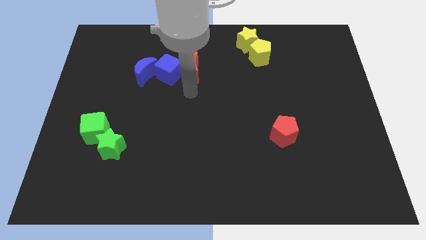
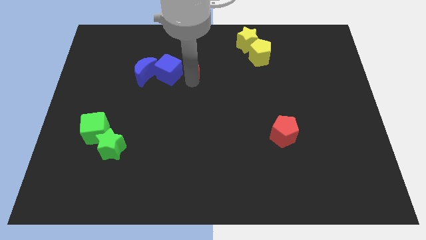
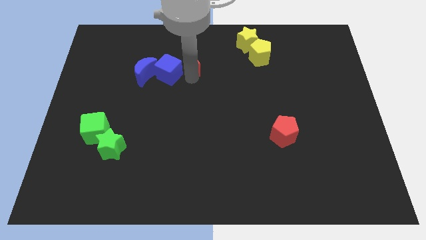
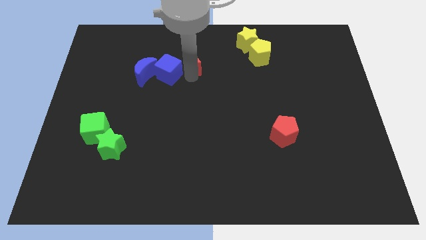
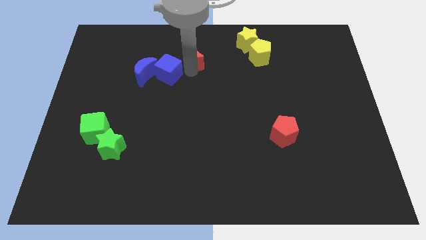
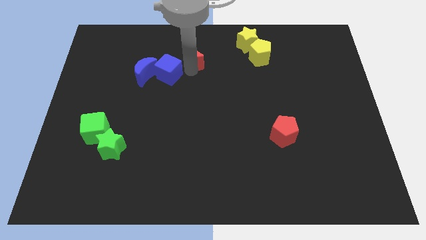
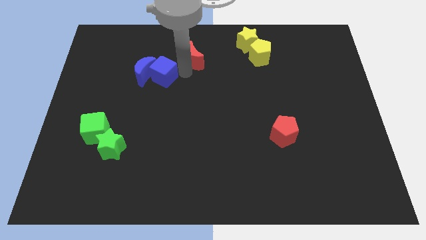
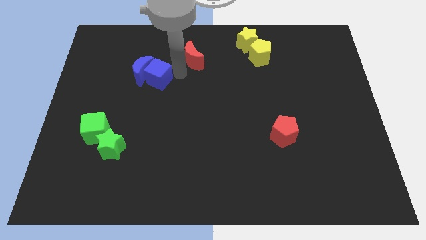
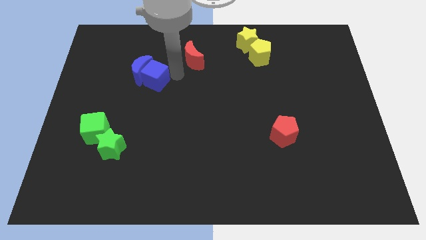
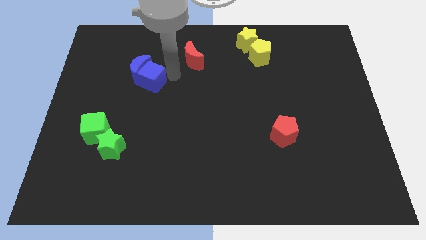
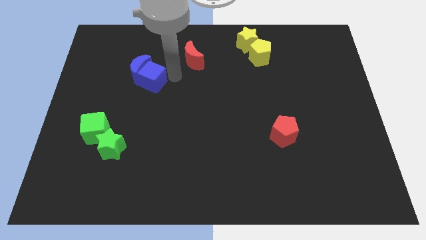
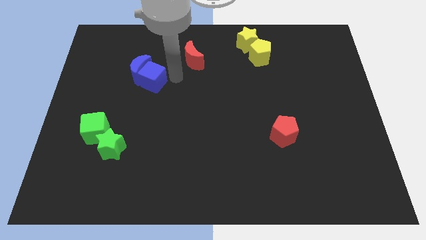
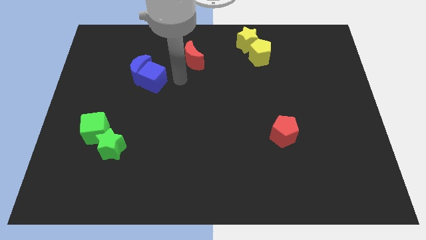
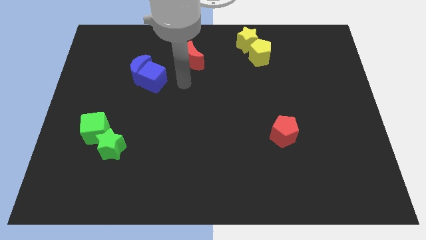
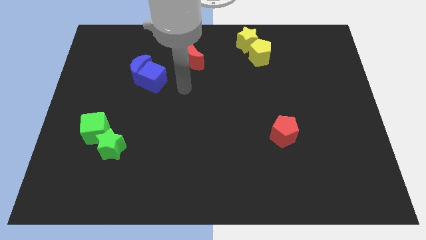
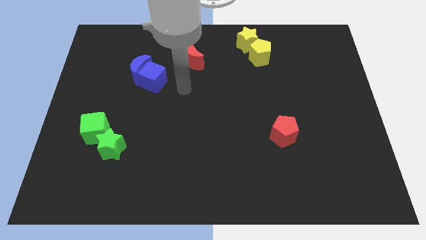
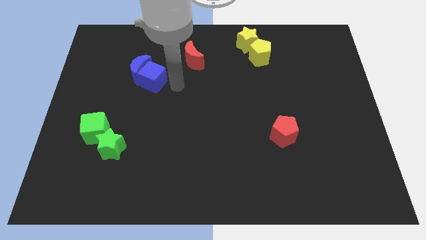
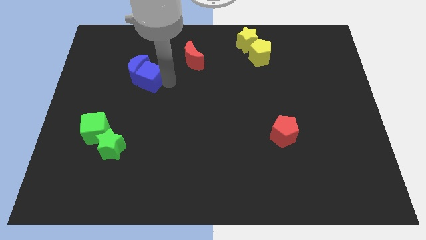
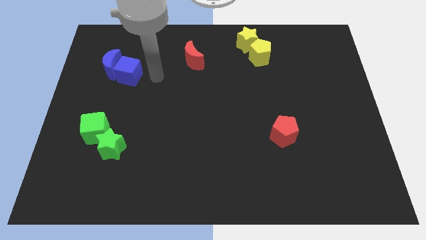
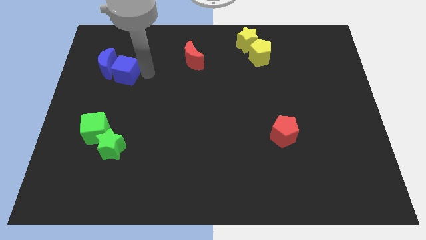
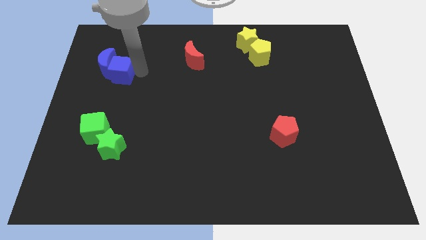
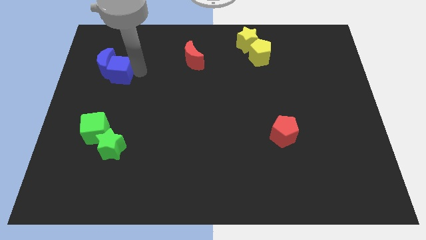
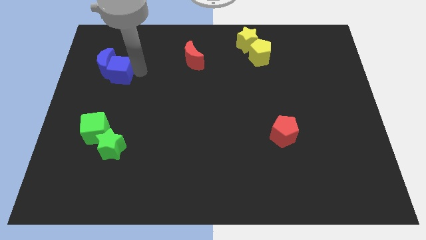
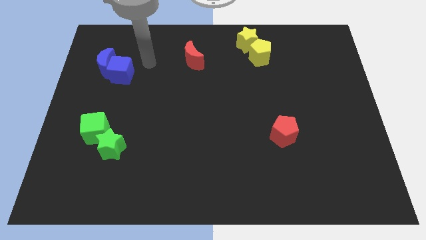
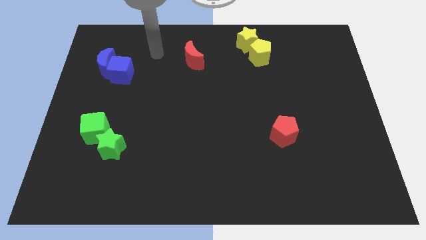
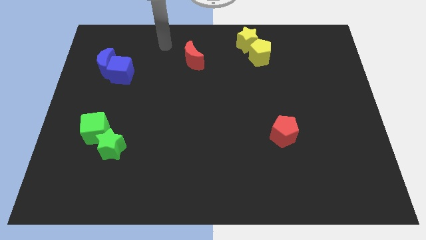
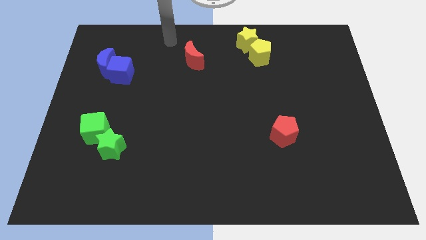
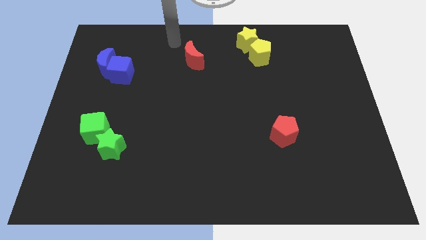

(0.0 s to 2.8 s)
move the blue cube into the blue crescent to the top left of the board

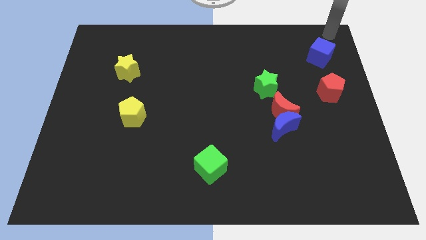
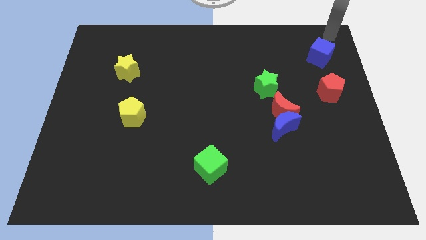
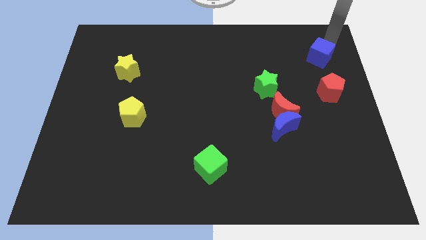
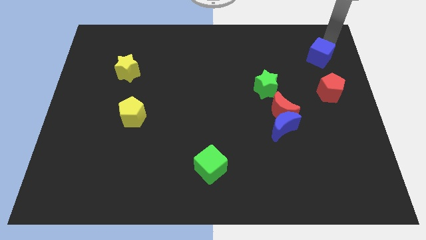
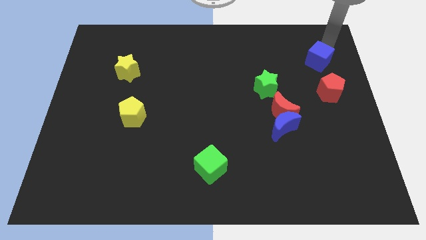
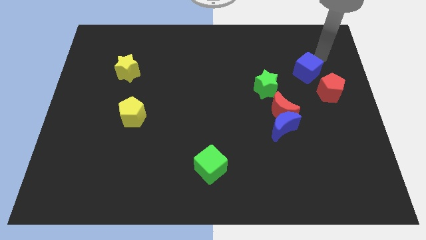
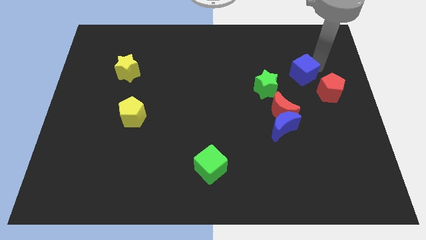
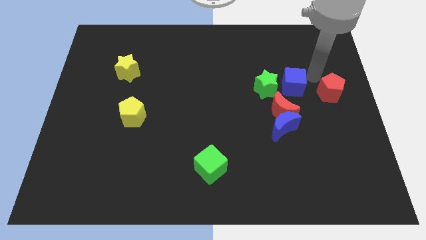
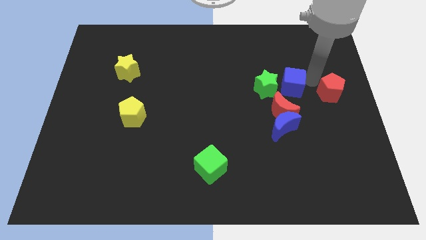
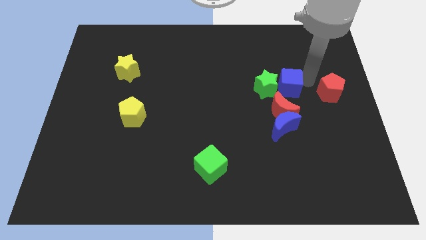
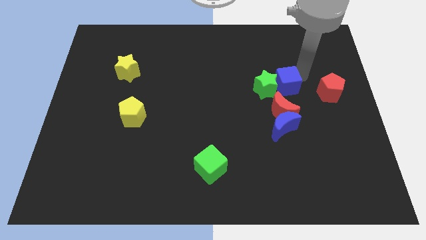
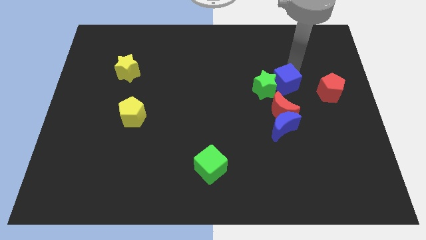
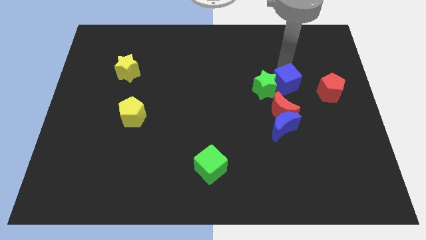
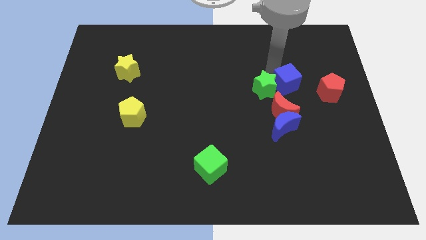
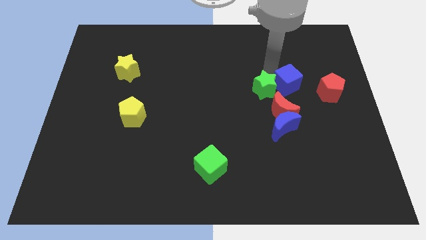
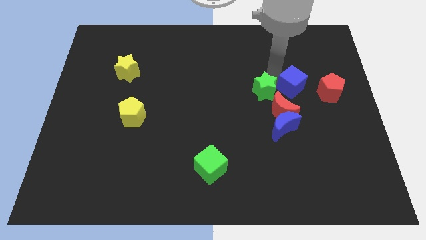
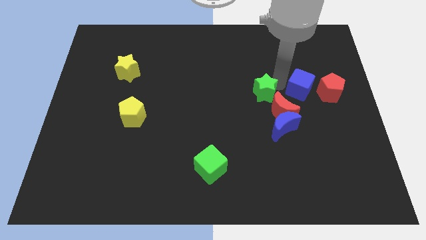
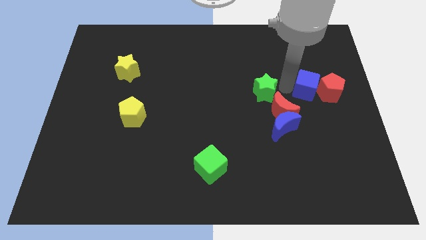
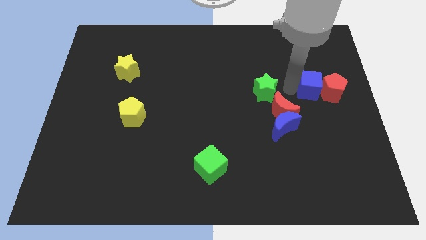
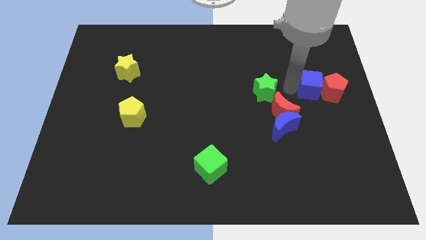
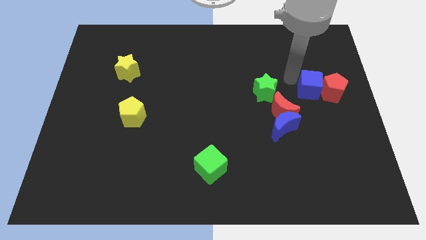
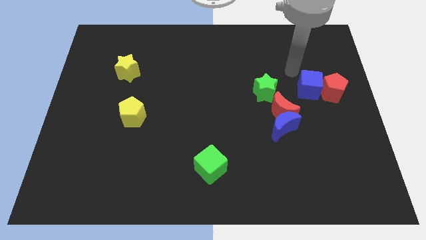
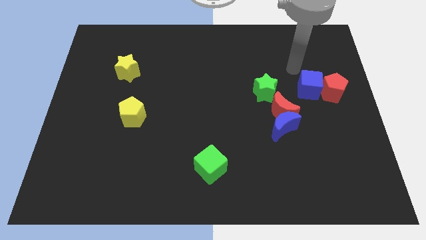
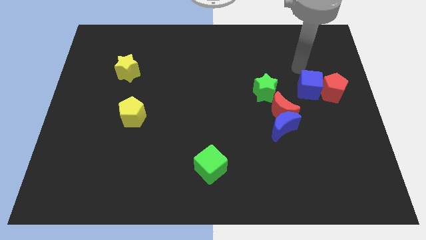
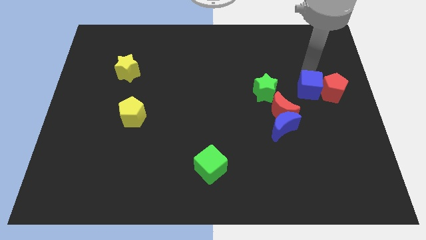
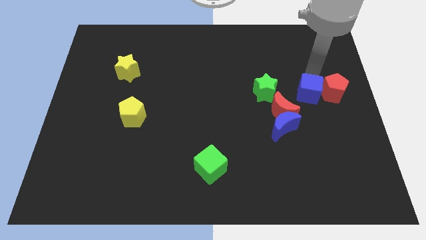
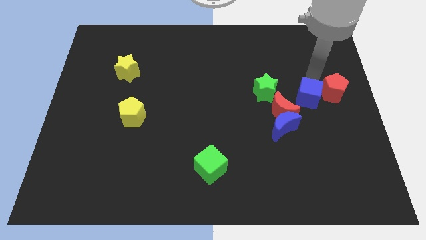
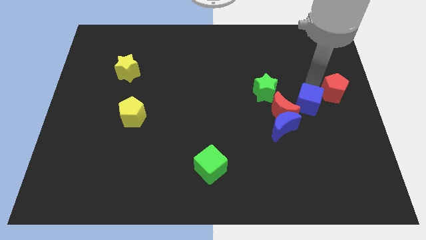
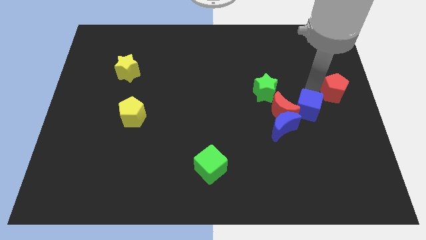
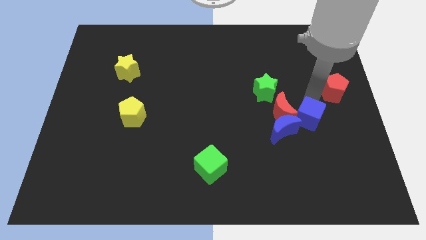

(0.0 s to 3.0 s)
push the blue cube to the right of the red crescent

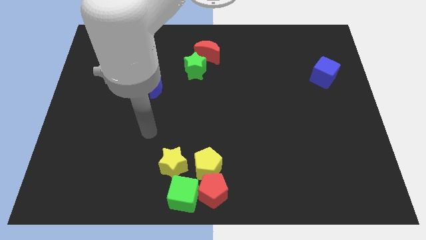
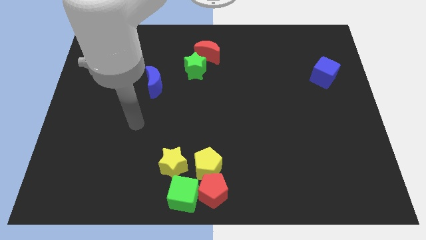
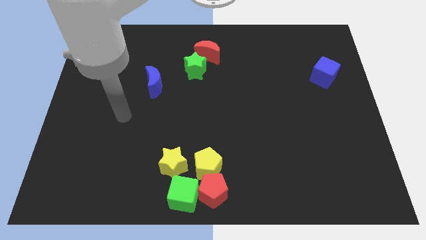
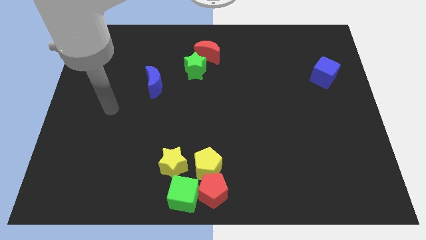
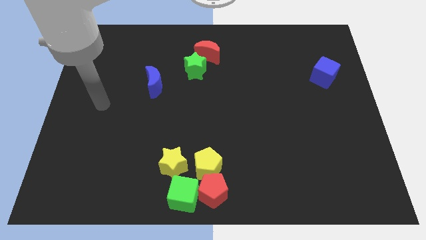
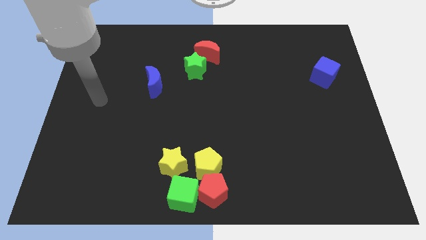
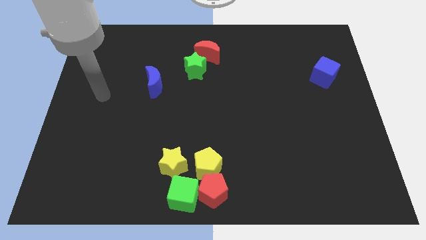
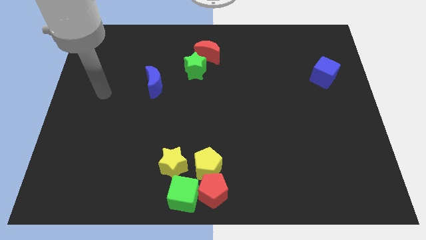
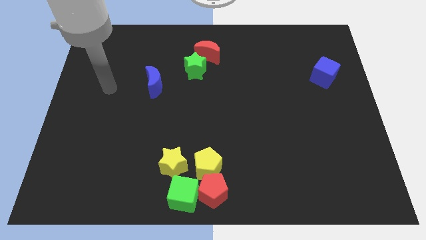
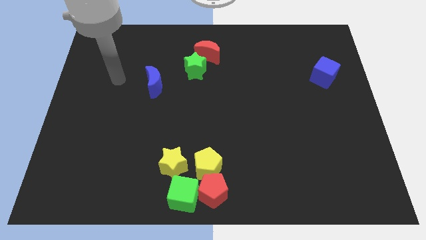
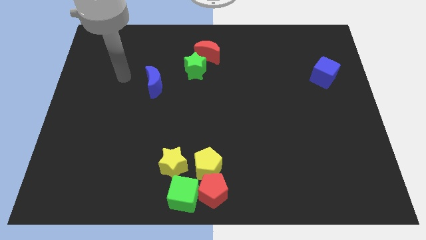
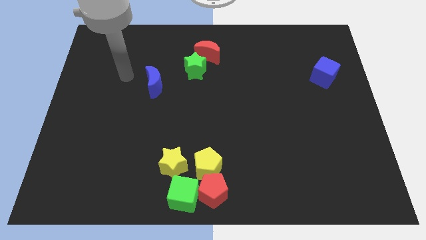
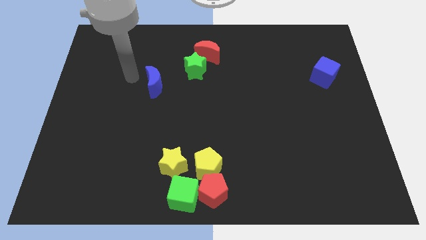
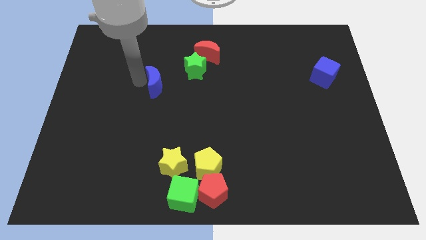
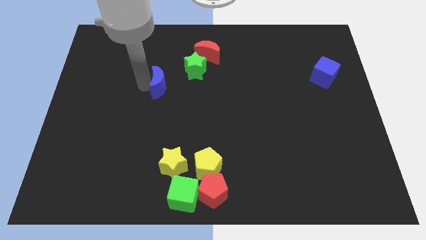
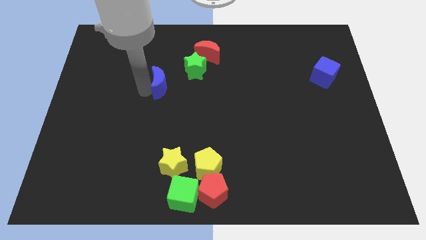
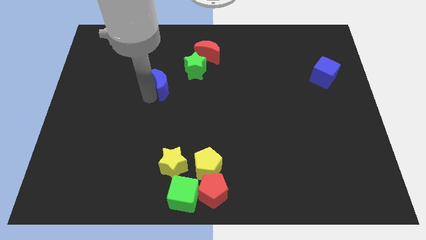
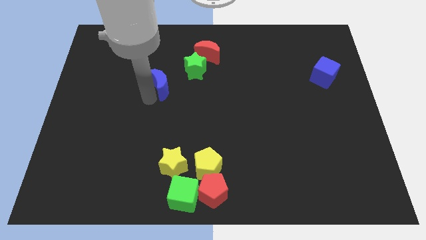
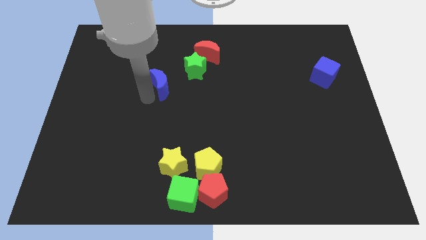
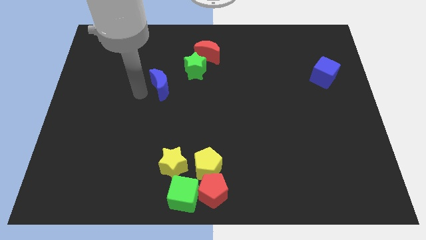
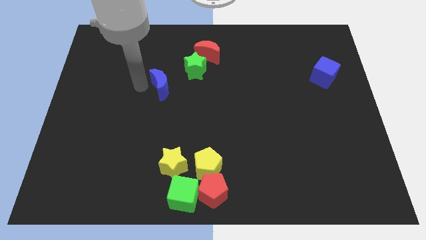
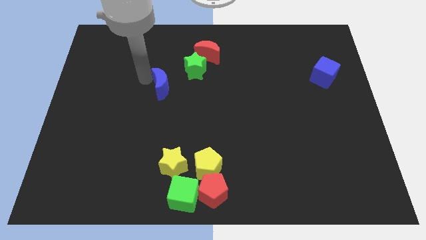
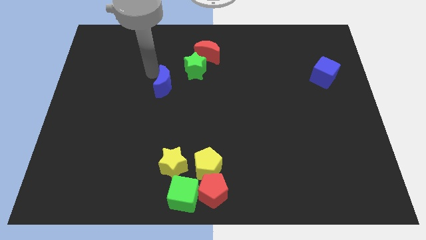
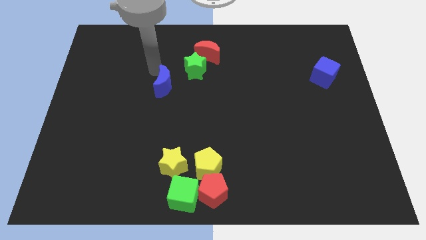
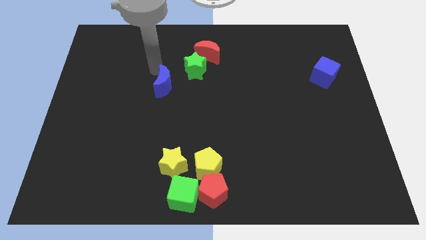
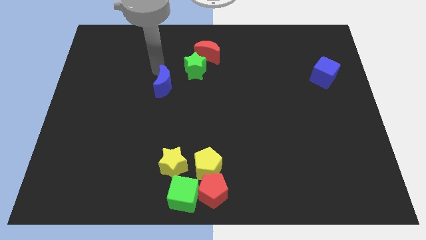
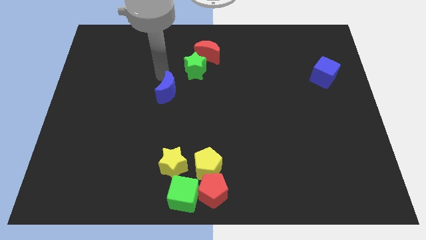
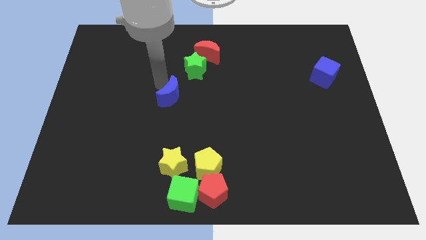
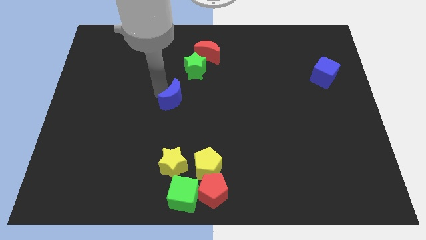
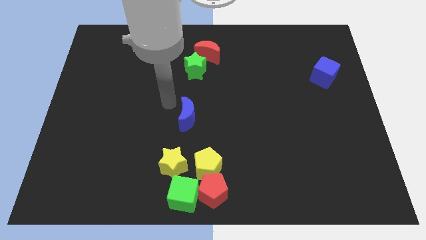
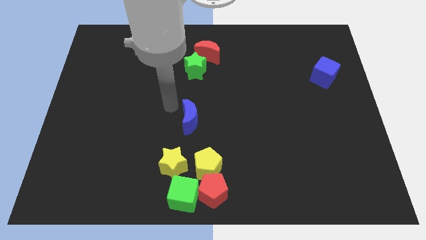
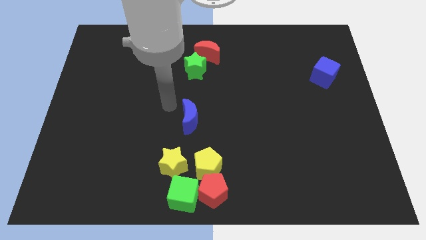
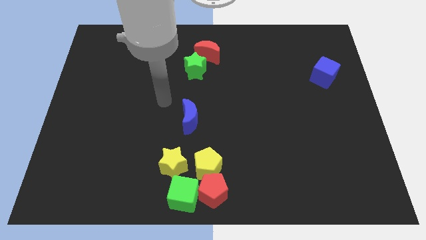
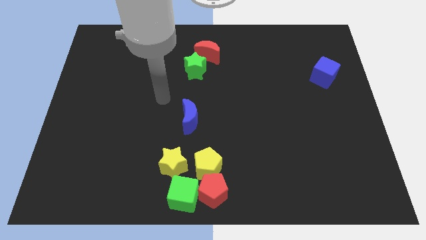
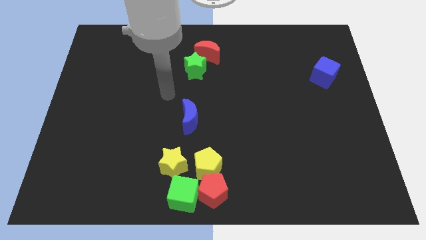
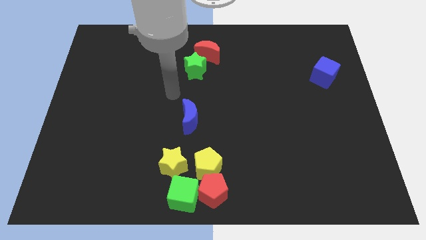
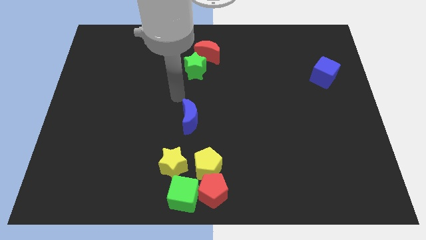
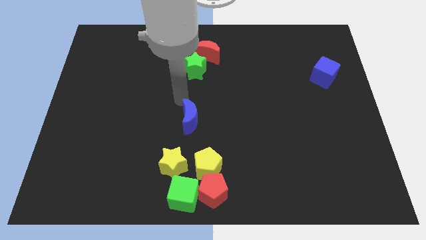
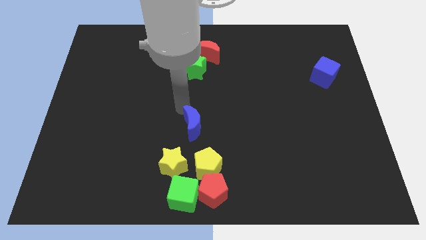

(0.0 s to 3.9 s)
place the blue crescent in between the green star and the yellow blocks
